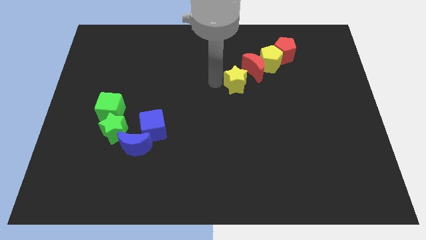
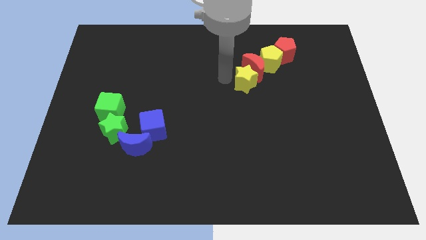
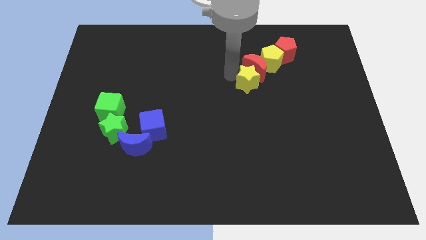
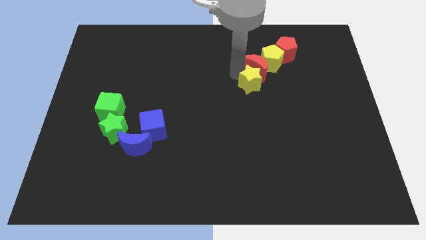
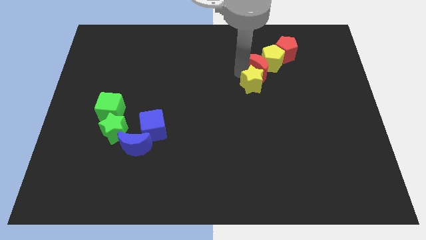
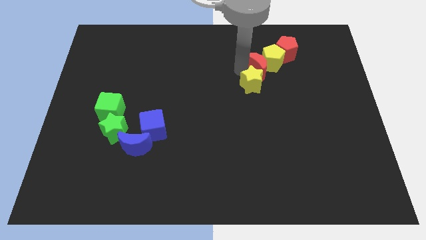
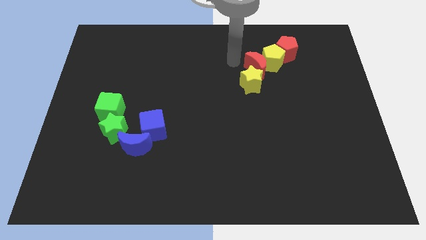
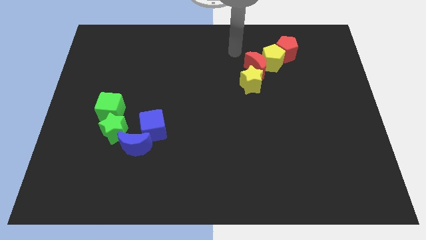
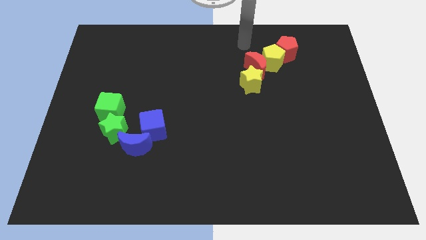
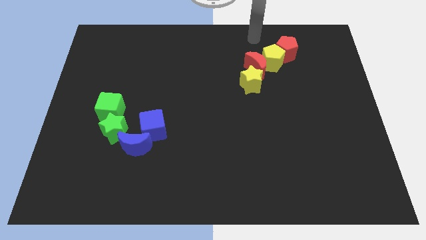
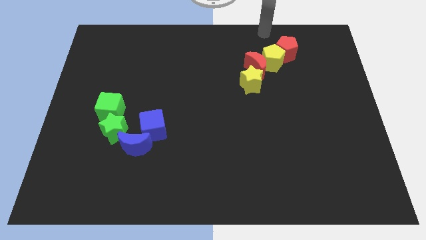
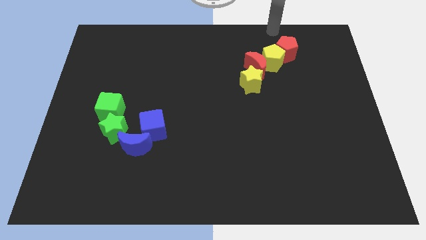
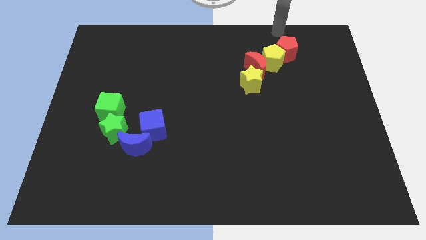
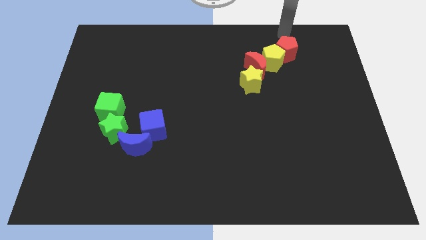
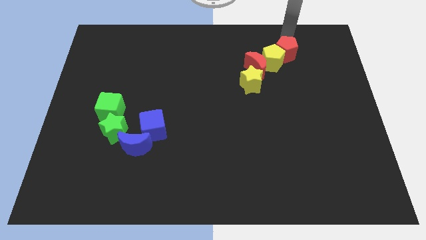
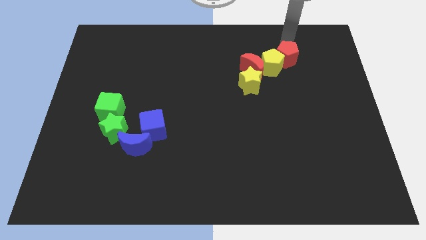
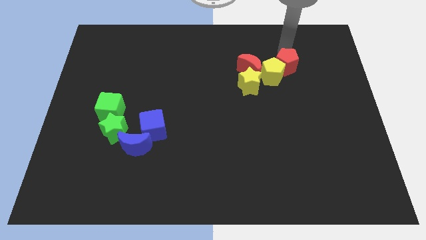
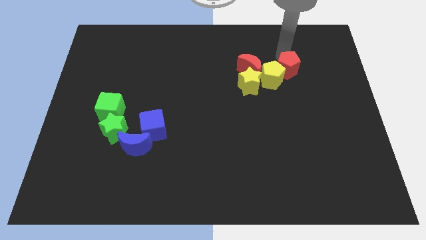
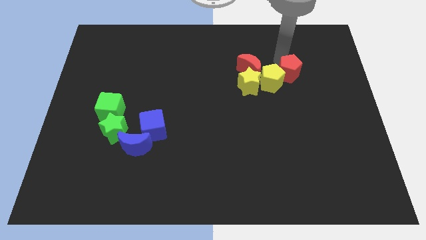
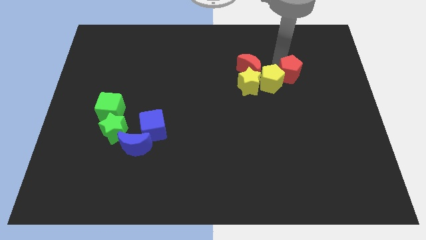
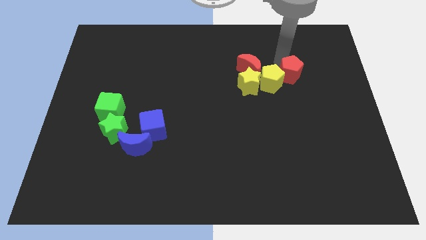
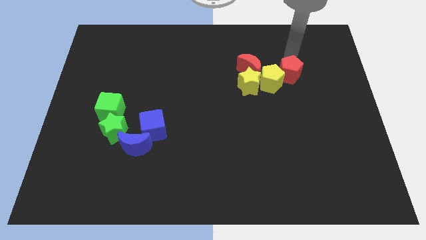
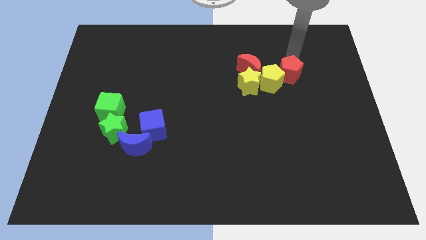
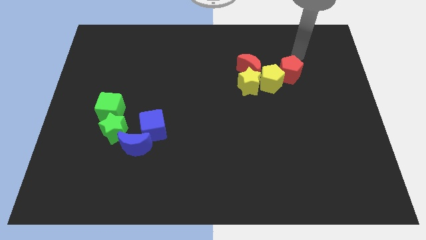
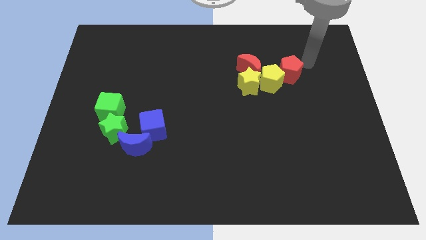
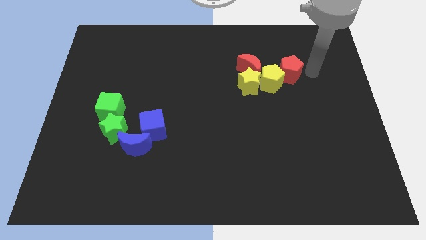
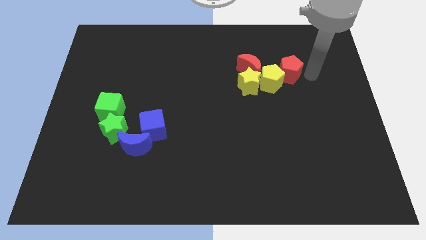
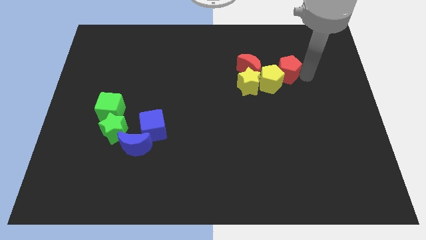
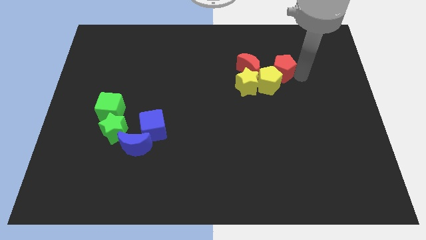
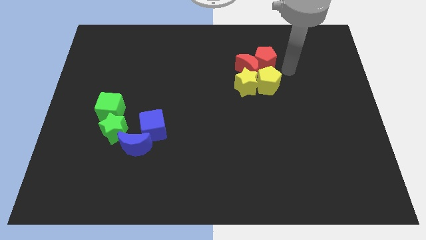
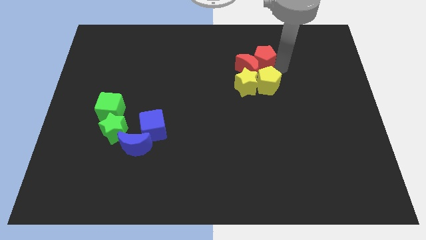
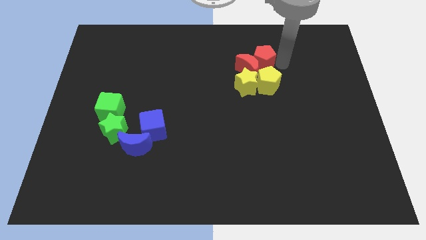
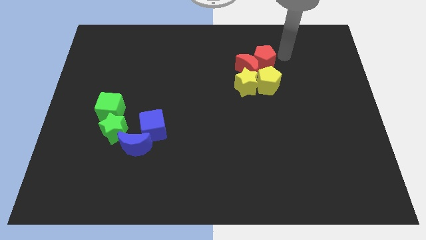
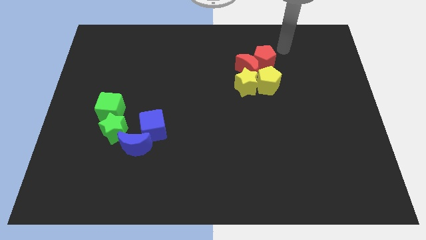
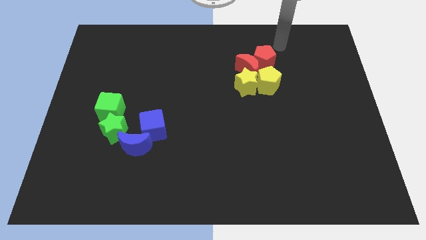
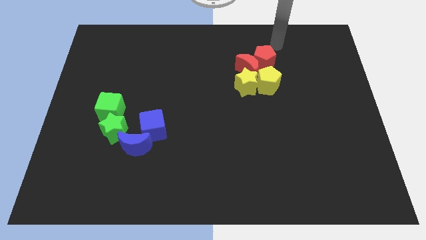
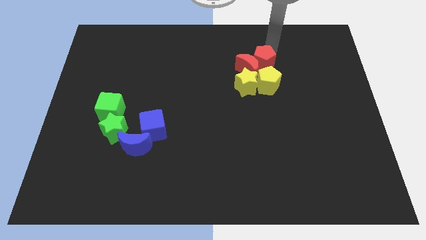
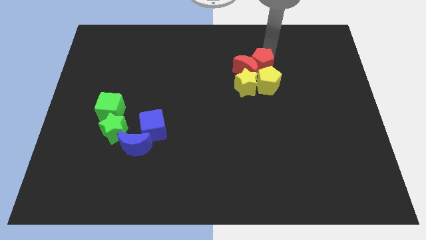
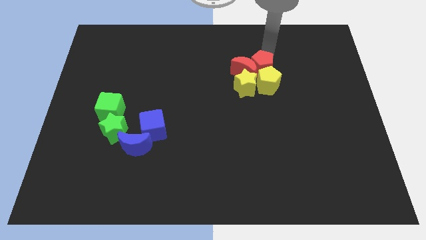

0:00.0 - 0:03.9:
put the red blocks vertically above the yellow blocks

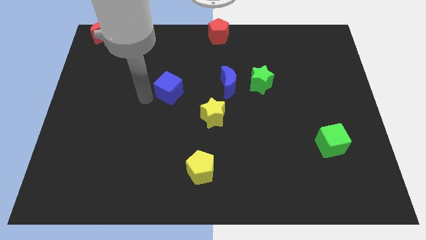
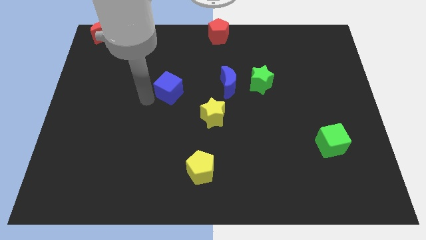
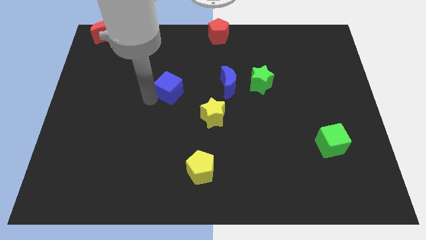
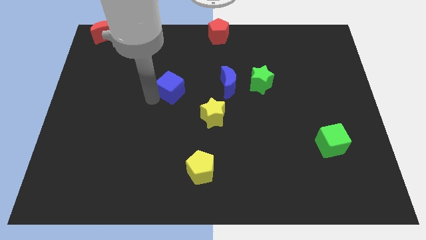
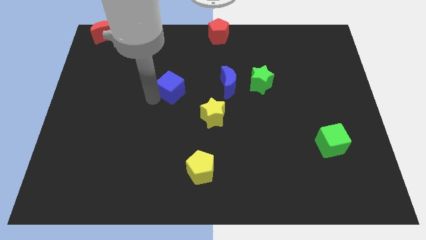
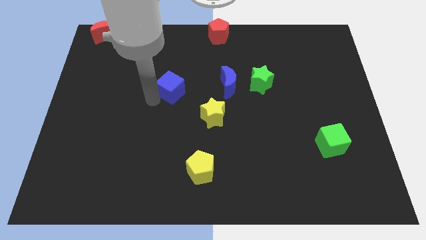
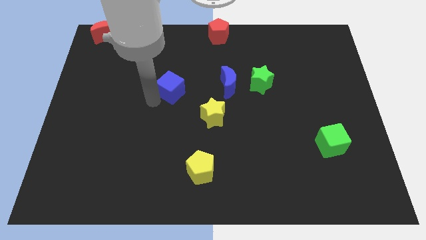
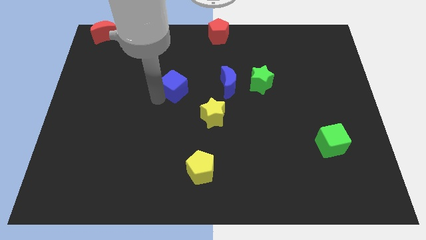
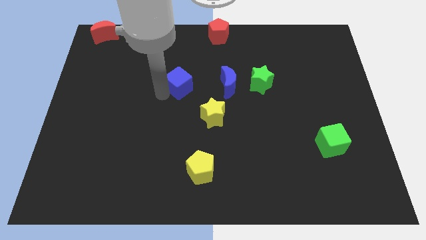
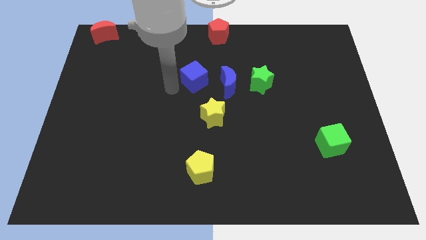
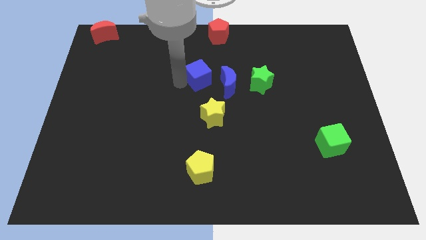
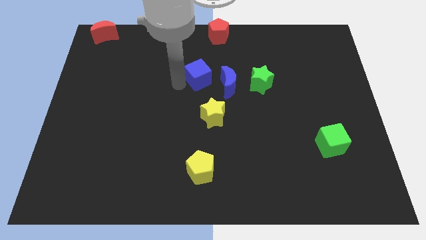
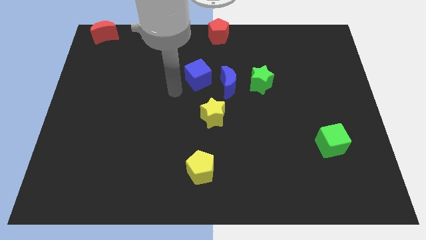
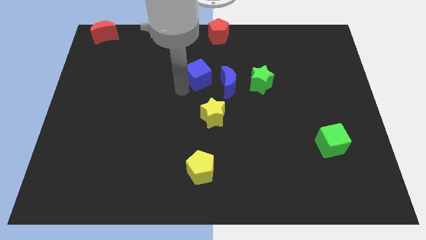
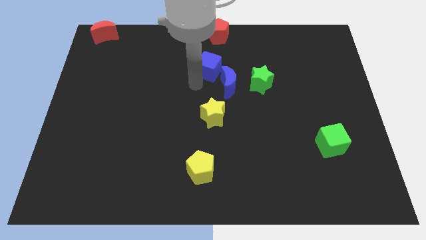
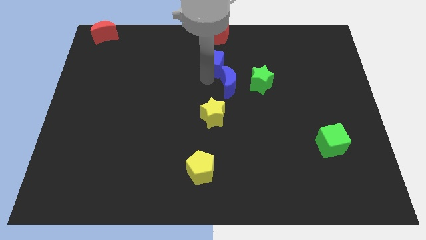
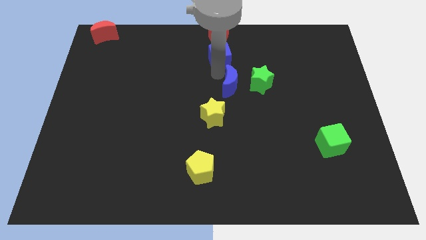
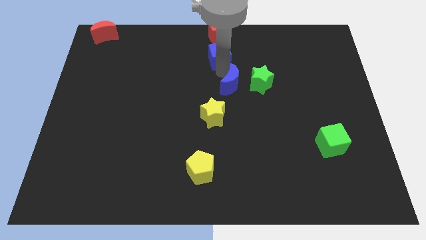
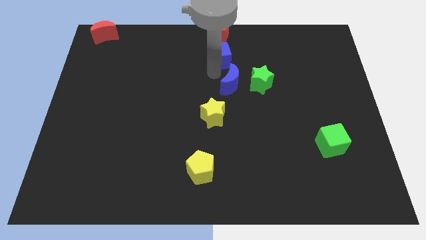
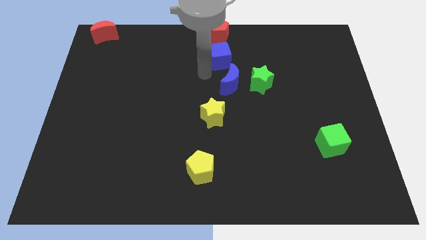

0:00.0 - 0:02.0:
place blue square in between the red pentagon and blue moon

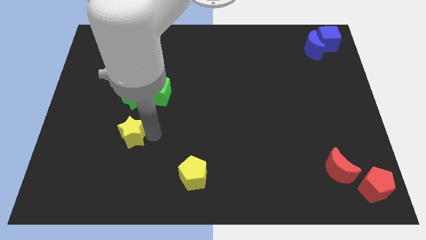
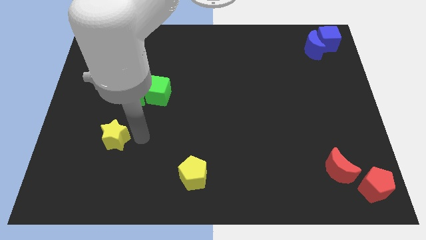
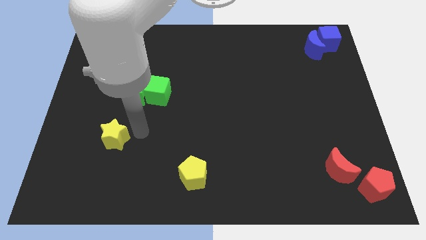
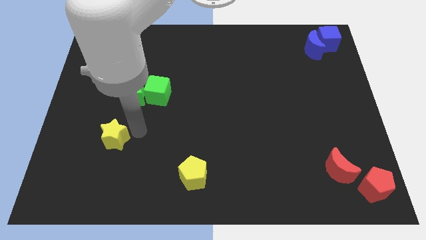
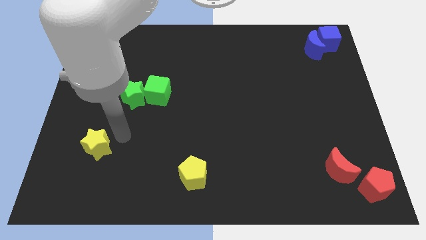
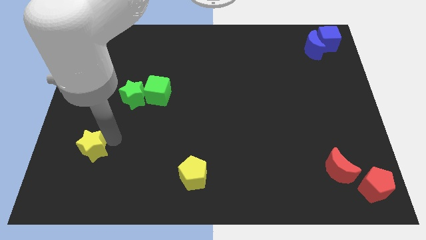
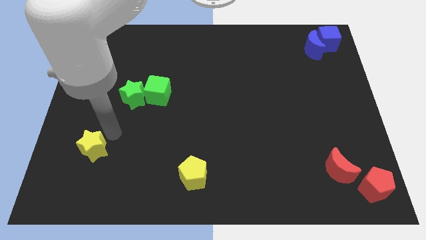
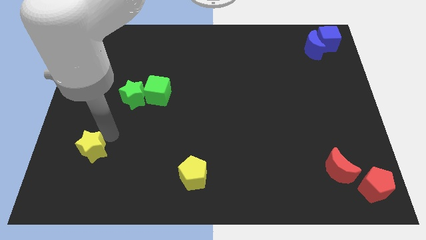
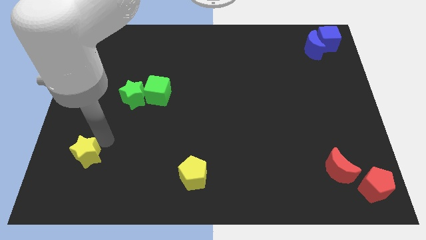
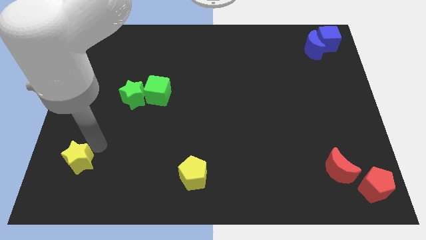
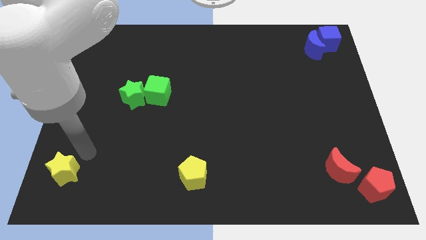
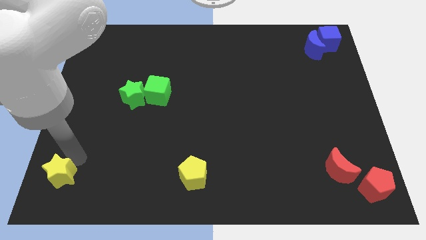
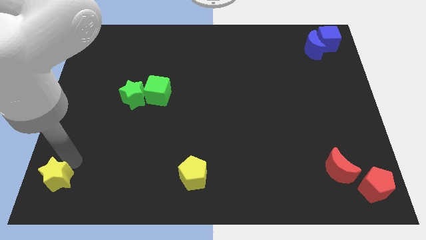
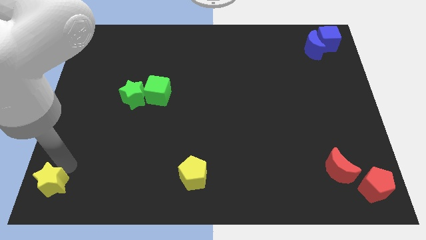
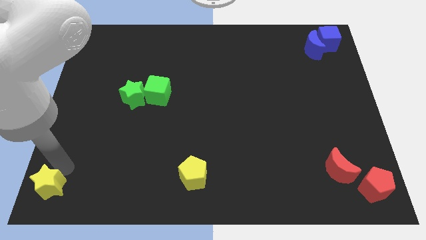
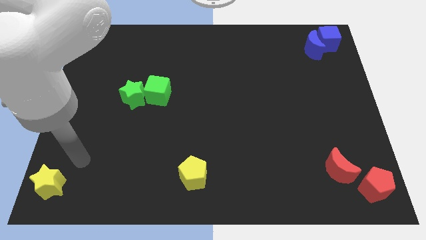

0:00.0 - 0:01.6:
place yellow star towards bottom left corner

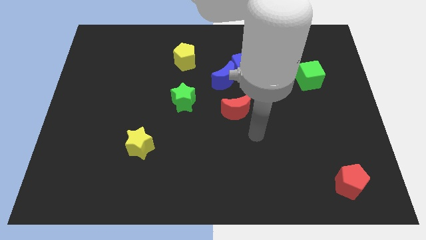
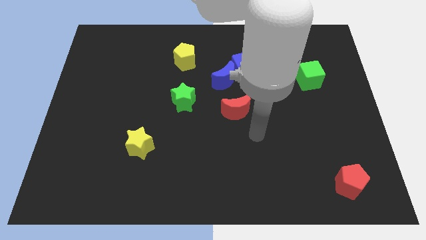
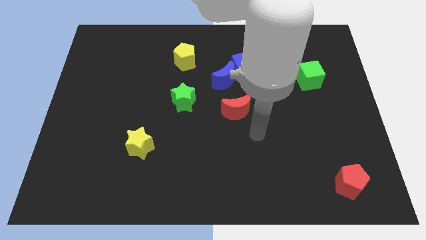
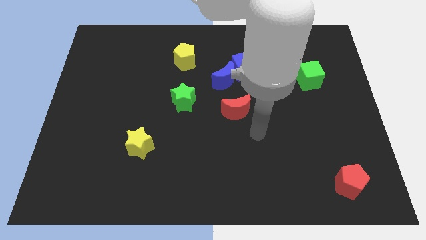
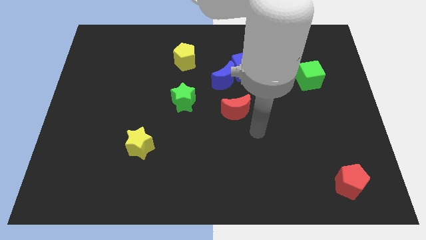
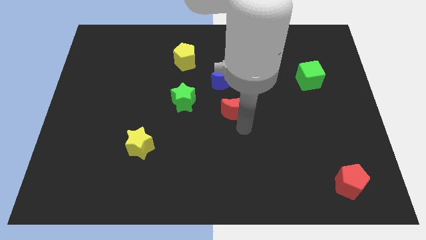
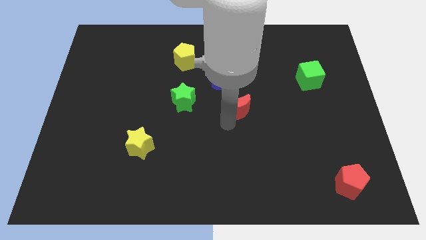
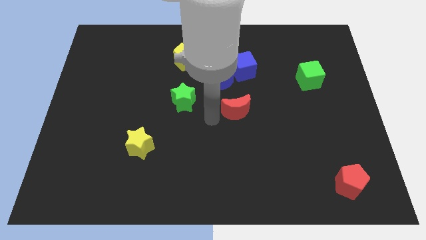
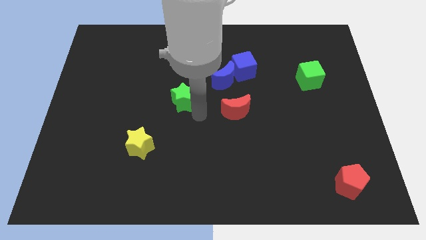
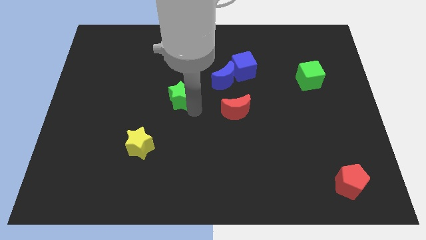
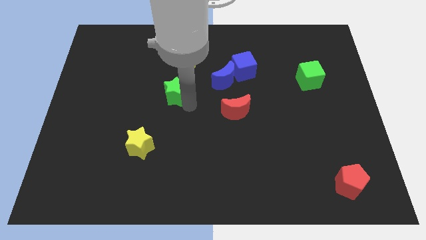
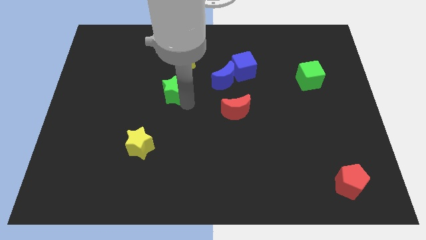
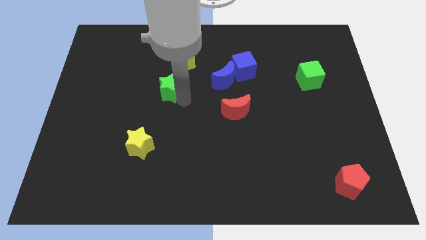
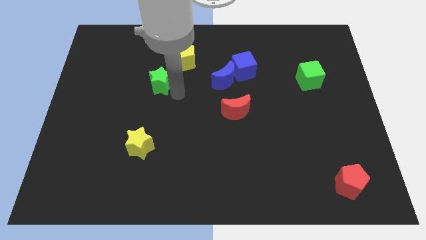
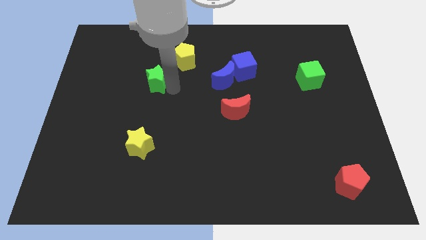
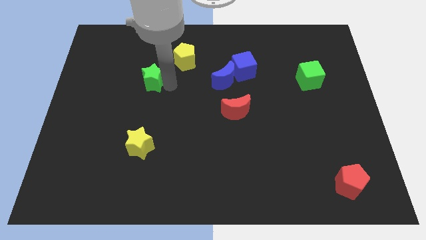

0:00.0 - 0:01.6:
place the green star vertically at the top side of the yellow star
